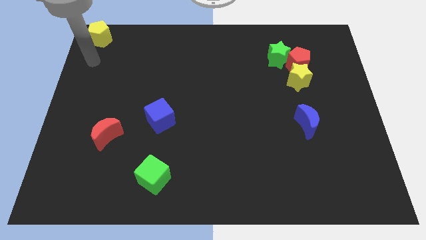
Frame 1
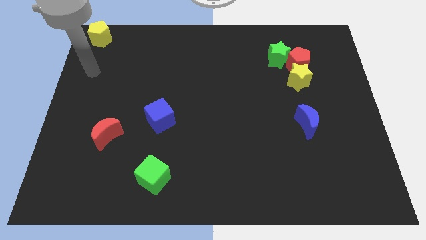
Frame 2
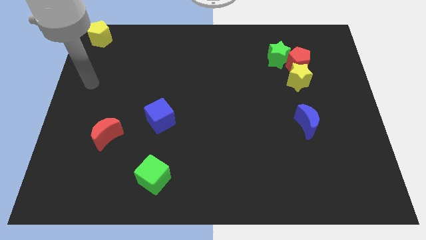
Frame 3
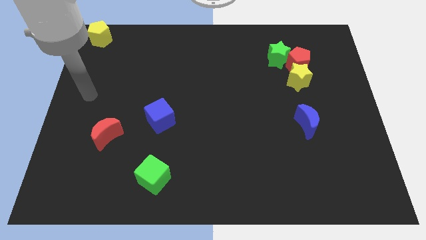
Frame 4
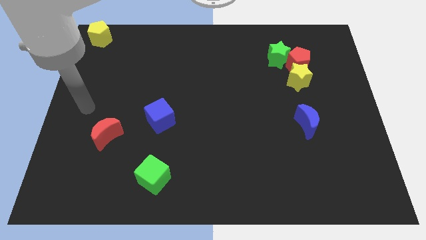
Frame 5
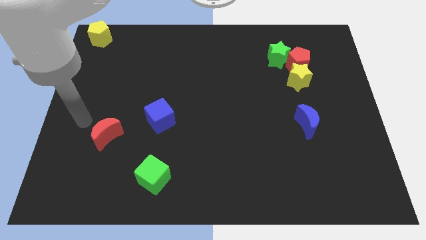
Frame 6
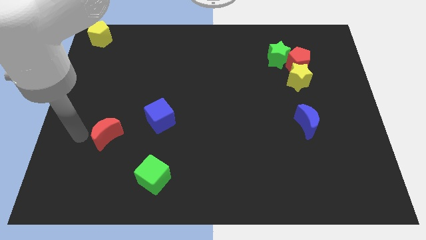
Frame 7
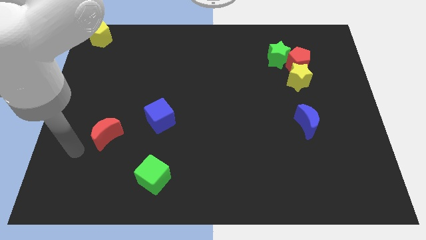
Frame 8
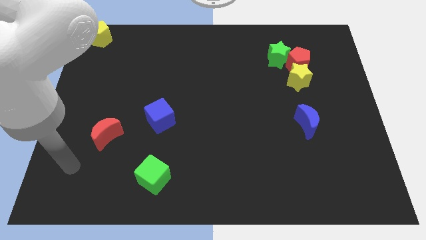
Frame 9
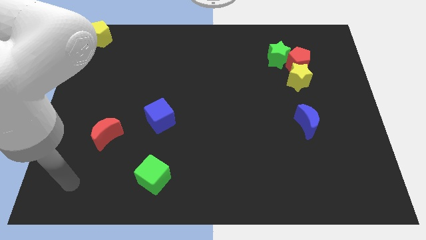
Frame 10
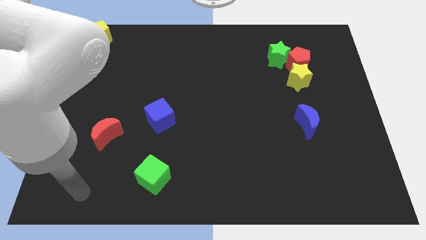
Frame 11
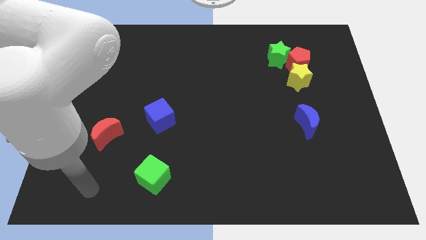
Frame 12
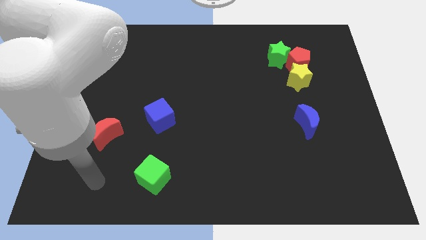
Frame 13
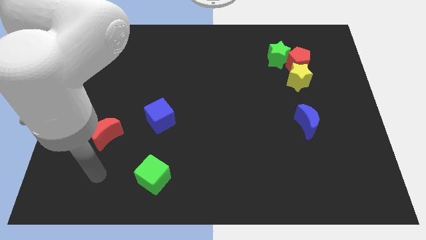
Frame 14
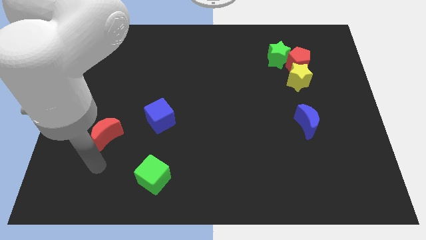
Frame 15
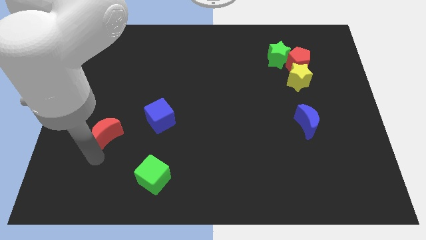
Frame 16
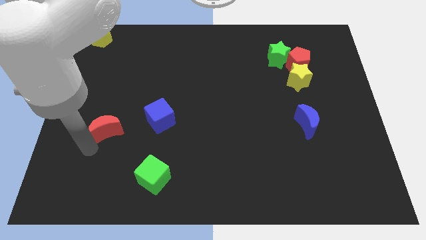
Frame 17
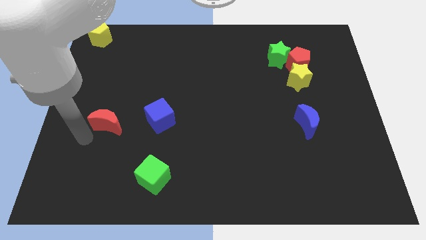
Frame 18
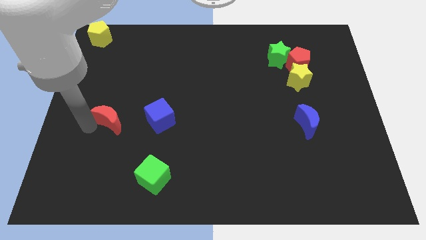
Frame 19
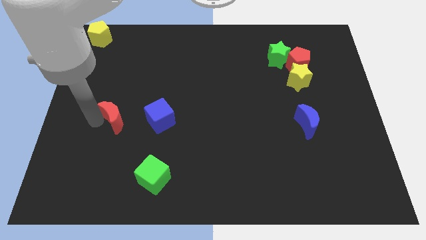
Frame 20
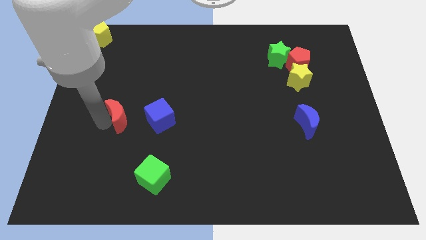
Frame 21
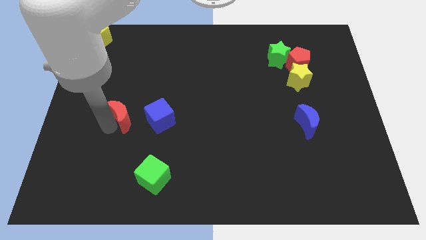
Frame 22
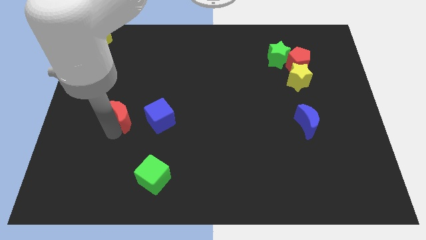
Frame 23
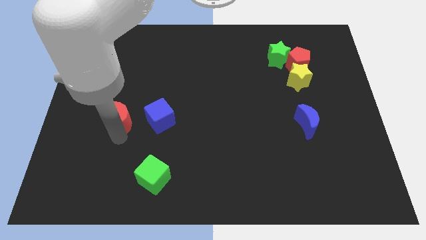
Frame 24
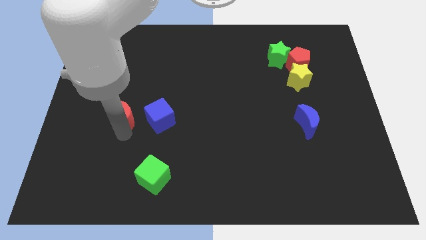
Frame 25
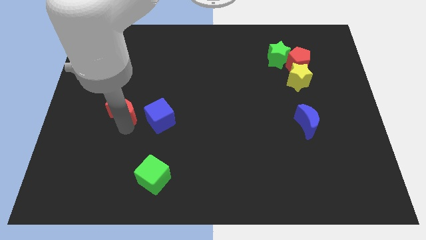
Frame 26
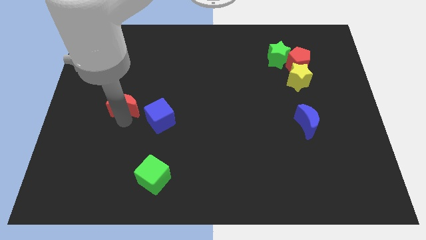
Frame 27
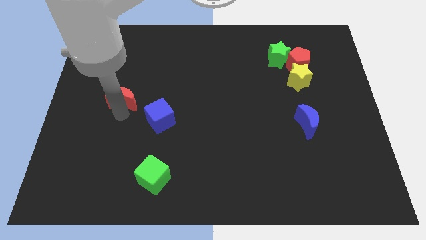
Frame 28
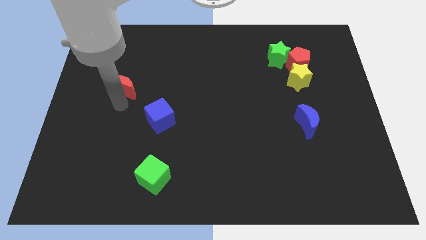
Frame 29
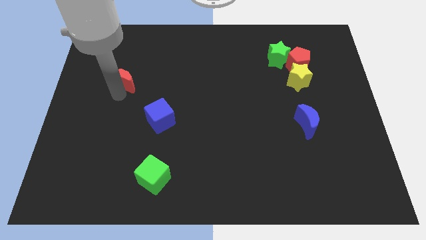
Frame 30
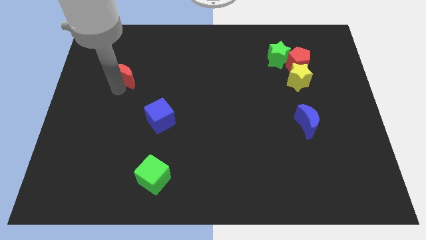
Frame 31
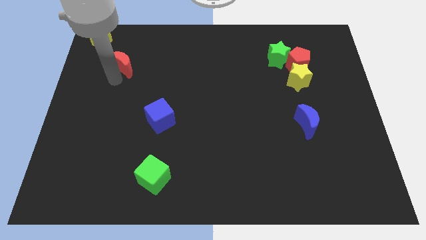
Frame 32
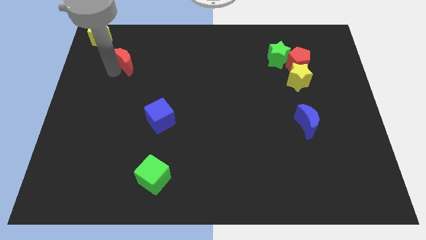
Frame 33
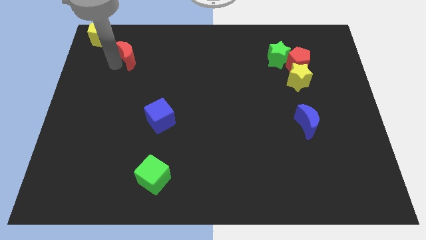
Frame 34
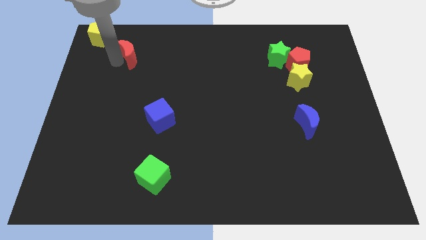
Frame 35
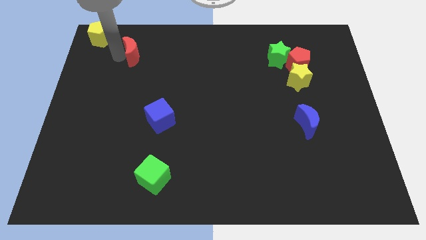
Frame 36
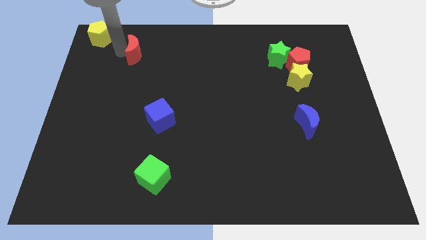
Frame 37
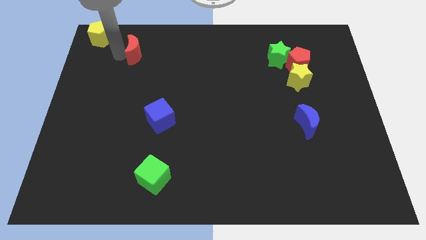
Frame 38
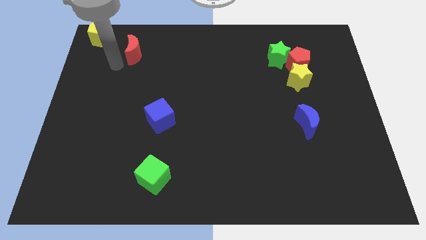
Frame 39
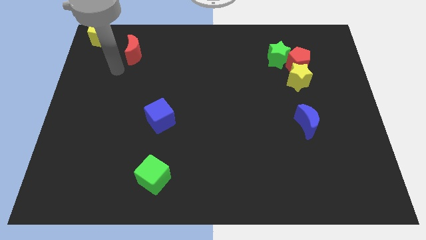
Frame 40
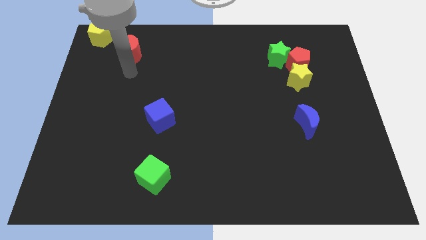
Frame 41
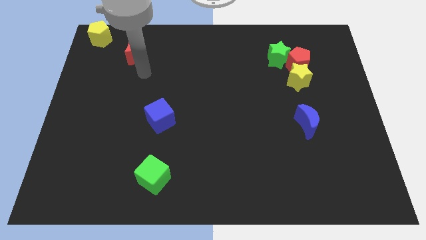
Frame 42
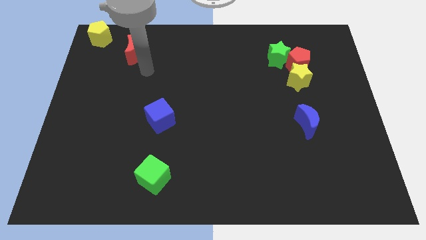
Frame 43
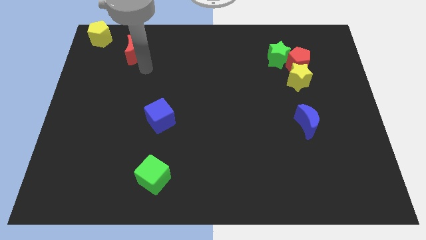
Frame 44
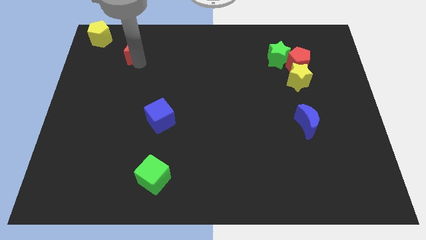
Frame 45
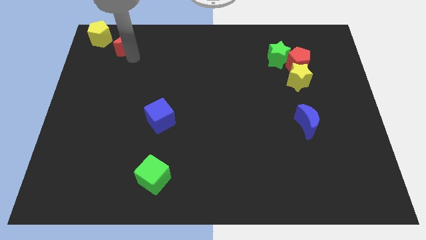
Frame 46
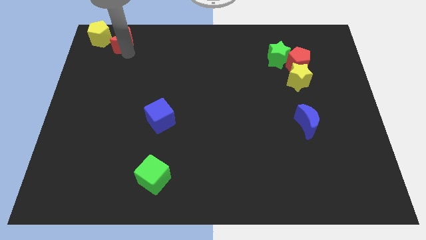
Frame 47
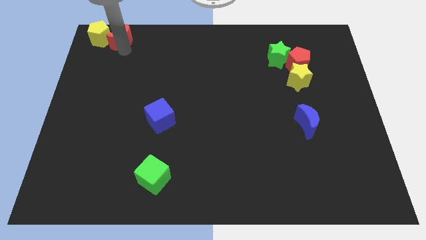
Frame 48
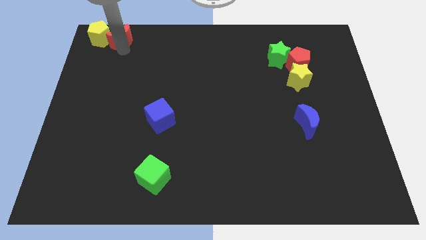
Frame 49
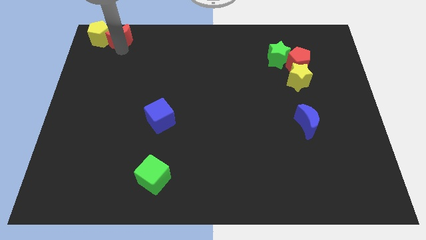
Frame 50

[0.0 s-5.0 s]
move the red moon right to the yellow pentagon

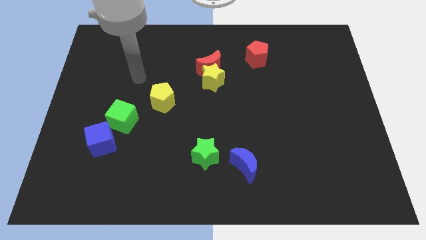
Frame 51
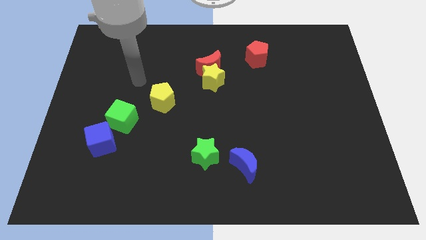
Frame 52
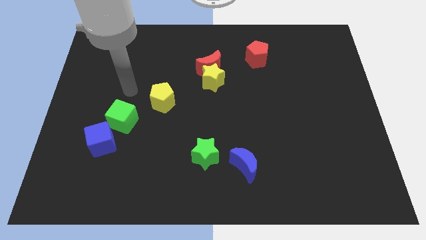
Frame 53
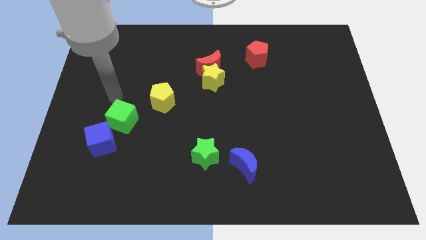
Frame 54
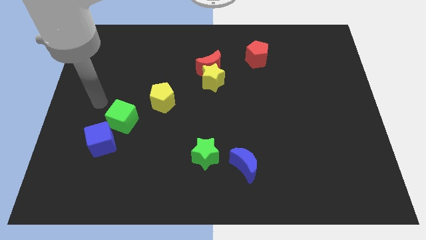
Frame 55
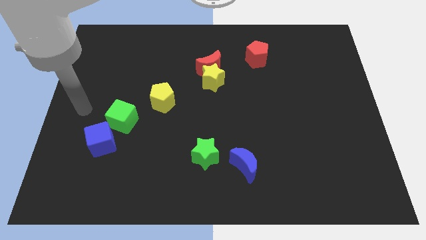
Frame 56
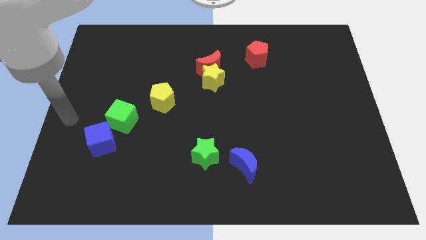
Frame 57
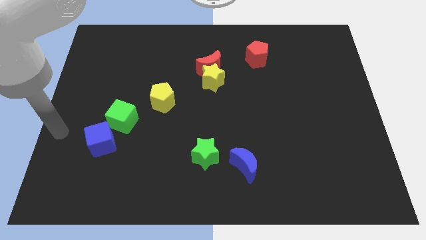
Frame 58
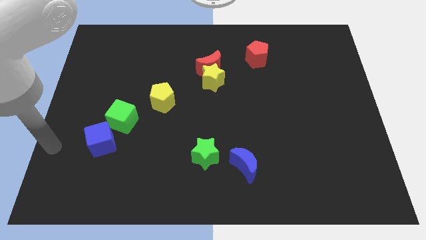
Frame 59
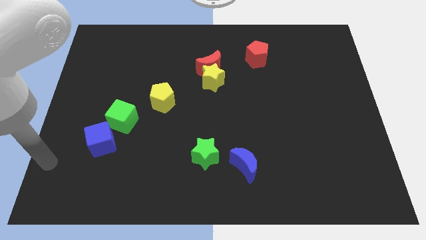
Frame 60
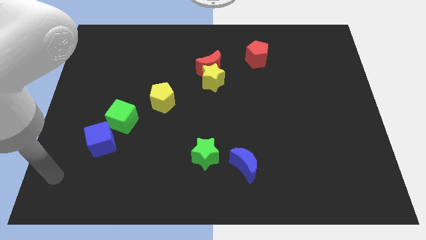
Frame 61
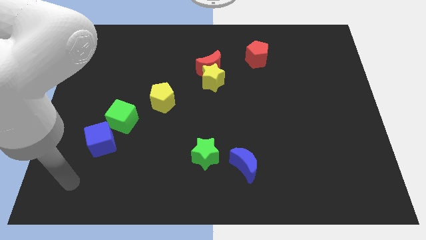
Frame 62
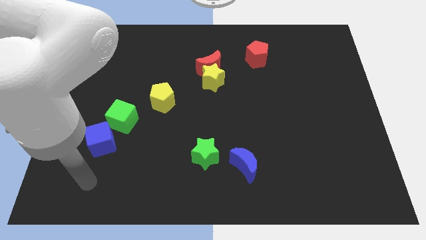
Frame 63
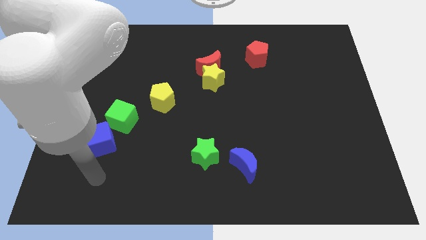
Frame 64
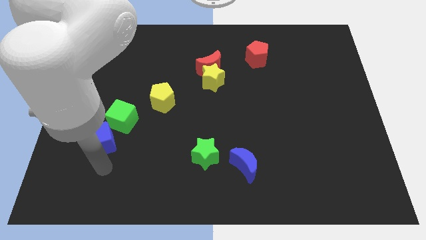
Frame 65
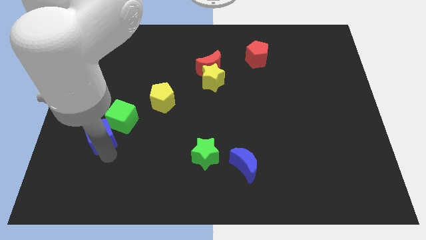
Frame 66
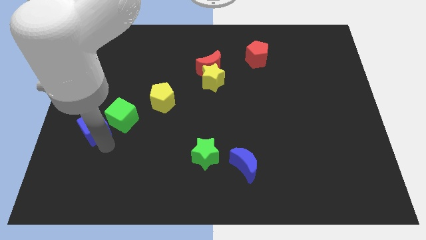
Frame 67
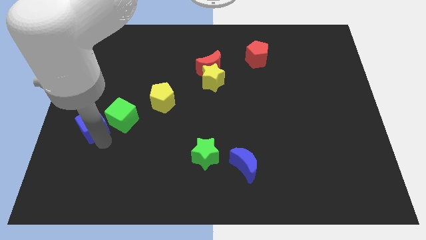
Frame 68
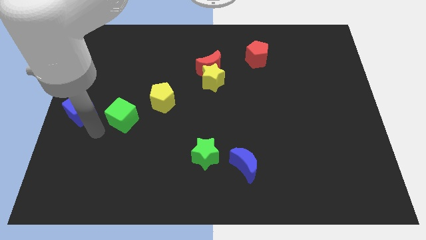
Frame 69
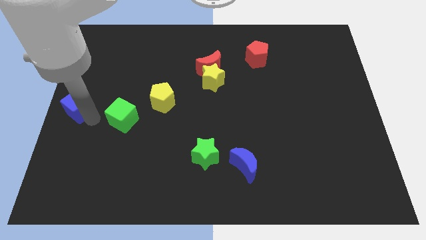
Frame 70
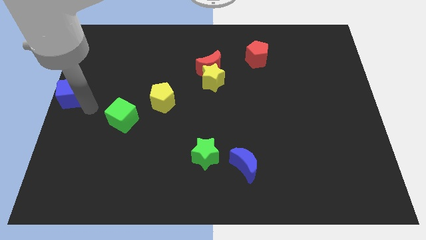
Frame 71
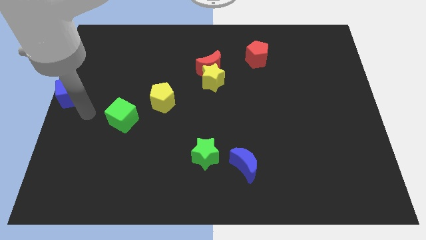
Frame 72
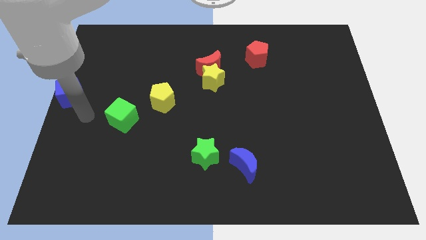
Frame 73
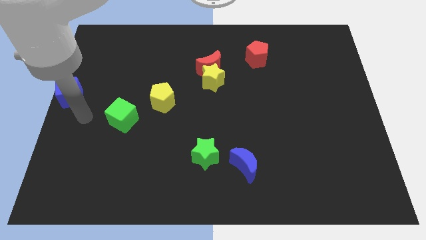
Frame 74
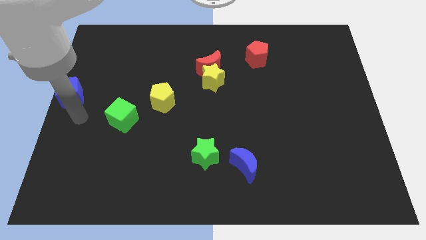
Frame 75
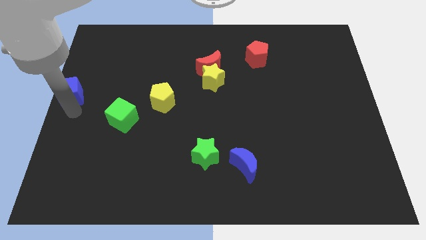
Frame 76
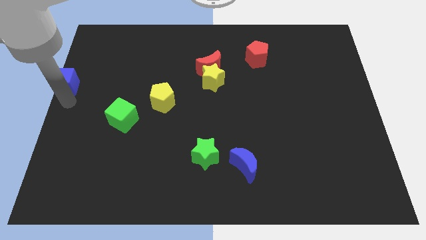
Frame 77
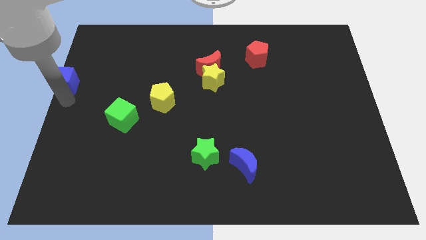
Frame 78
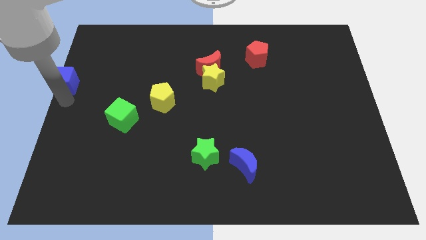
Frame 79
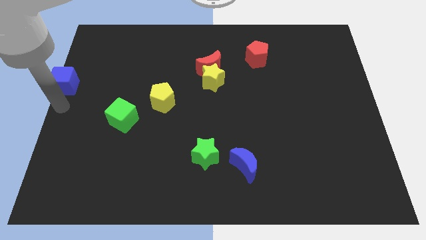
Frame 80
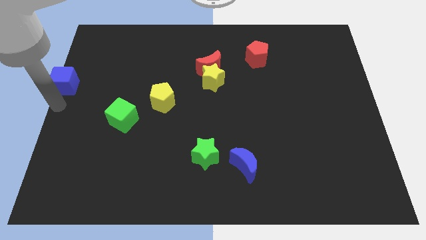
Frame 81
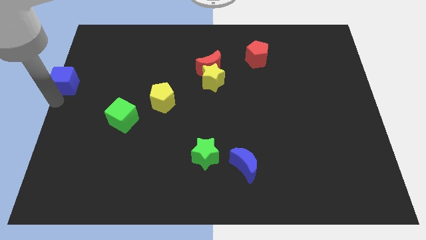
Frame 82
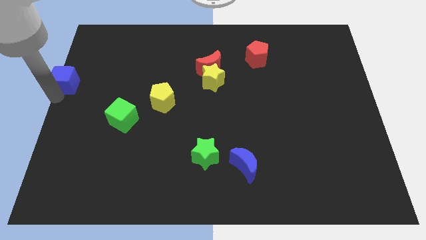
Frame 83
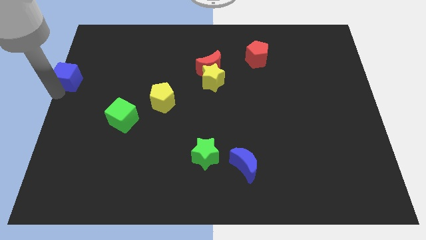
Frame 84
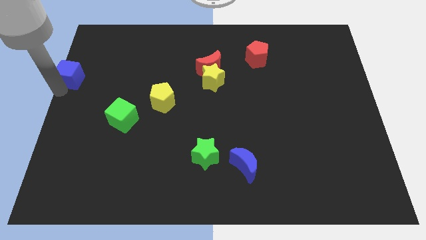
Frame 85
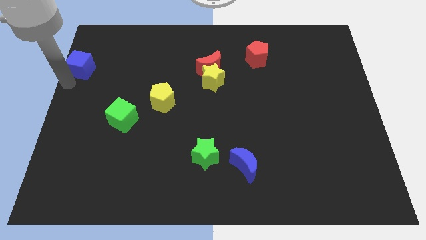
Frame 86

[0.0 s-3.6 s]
move the blue cube to the top of the board

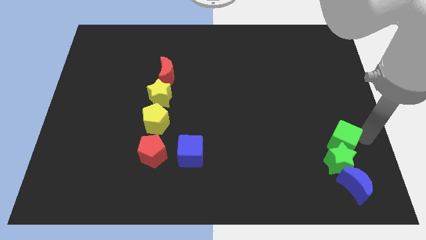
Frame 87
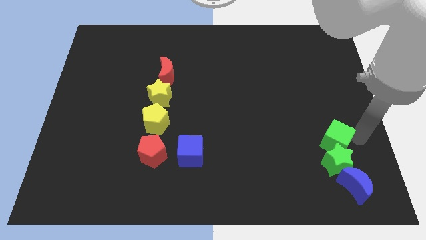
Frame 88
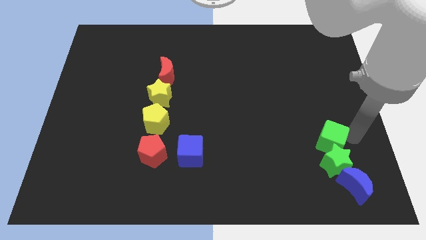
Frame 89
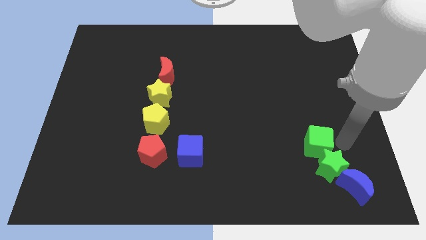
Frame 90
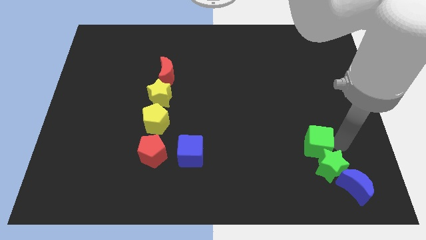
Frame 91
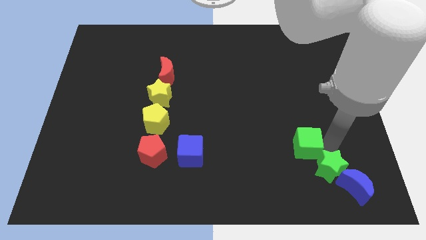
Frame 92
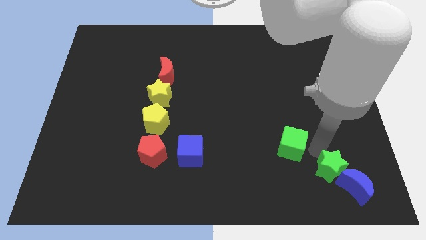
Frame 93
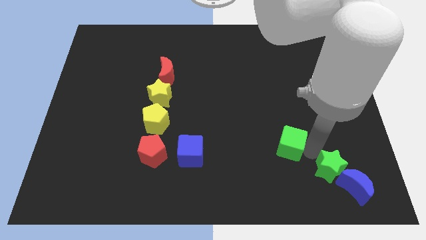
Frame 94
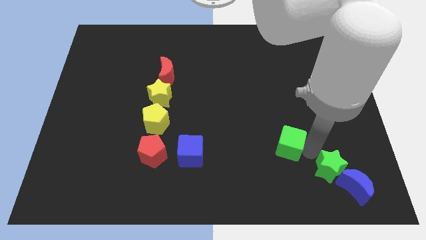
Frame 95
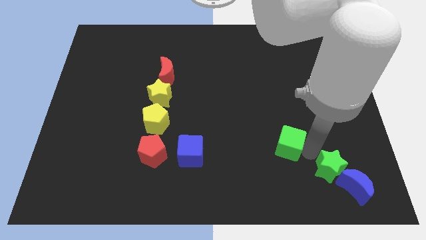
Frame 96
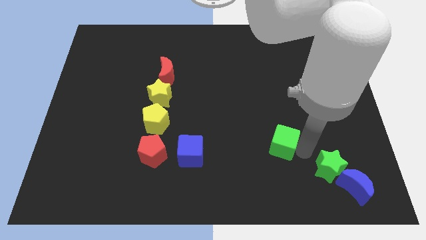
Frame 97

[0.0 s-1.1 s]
separate the green cube from the green star
